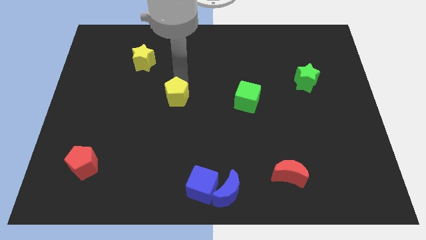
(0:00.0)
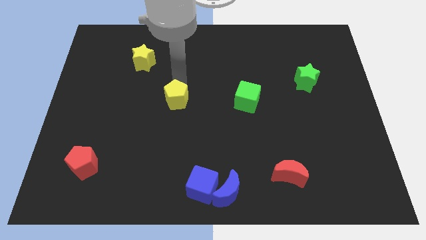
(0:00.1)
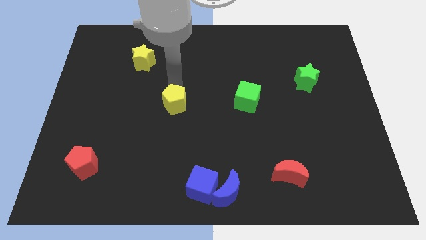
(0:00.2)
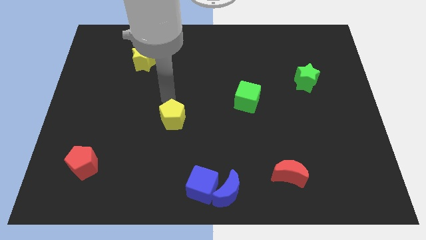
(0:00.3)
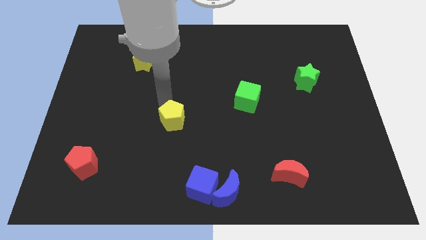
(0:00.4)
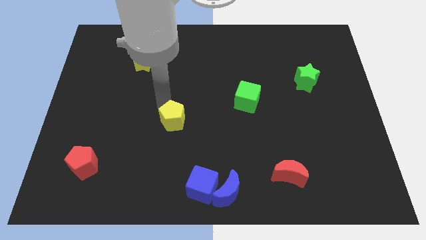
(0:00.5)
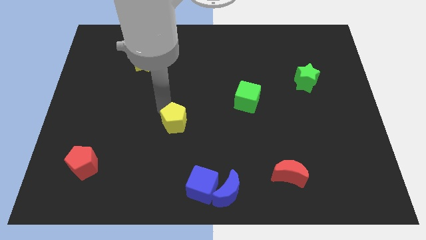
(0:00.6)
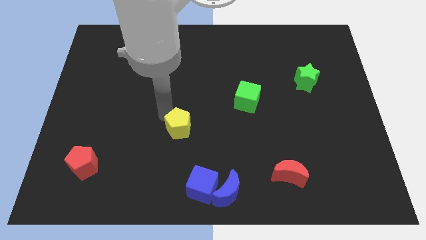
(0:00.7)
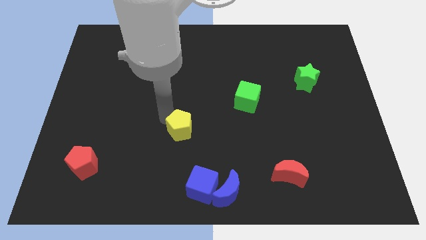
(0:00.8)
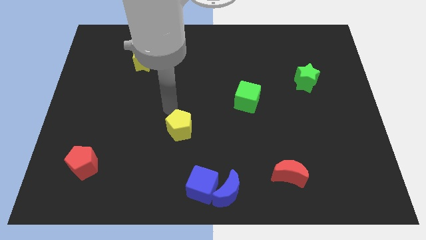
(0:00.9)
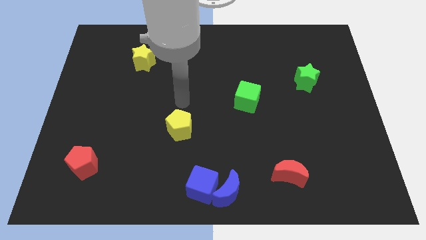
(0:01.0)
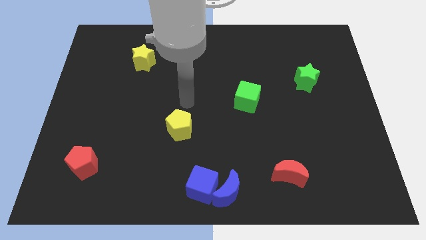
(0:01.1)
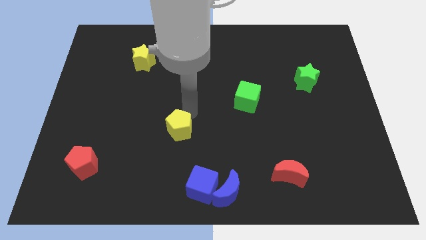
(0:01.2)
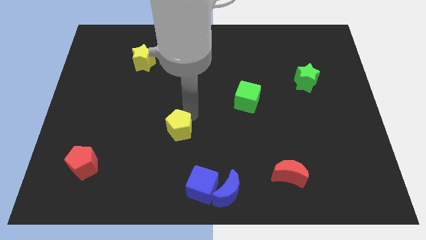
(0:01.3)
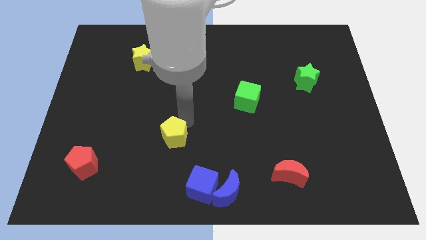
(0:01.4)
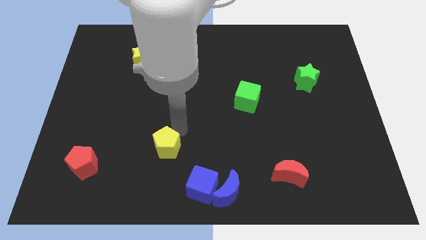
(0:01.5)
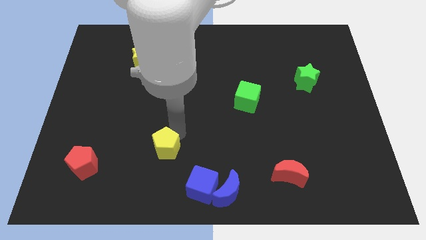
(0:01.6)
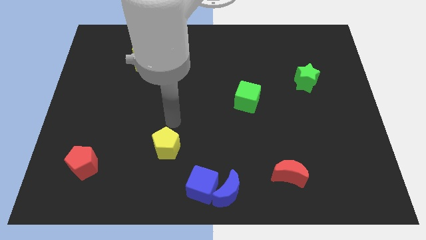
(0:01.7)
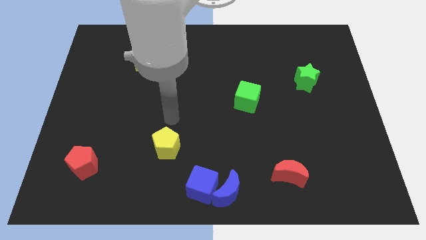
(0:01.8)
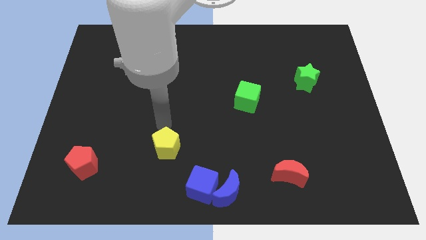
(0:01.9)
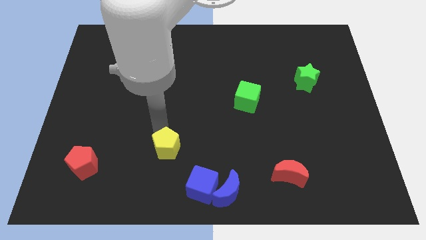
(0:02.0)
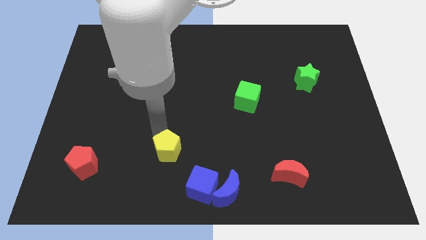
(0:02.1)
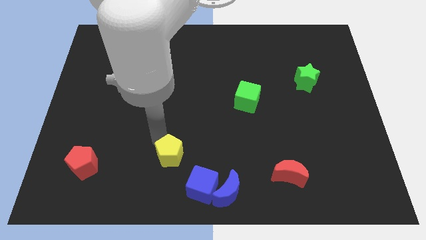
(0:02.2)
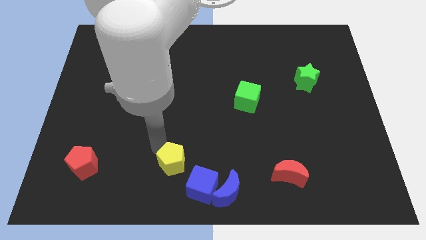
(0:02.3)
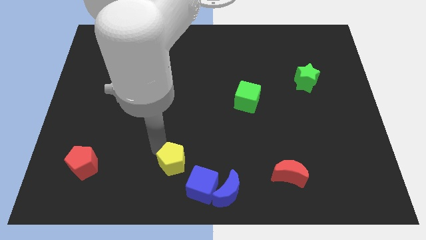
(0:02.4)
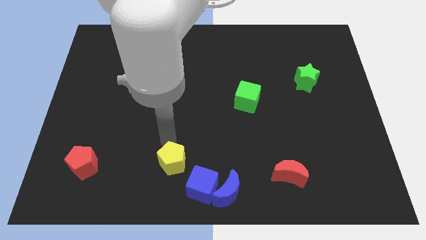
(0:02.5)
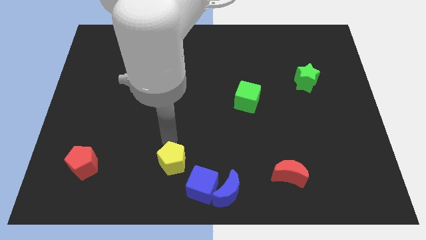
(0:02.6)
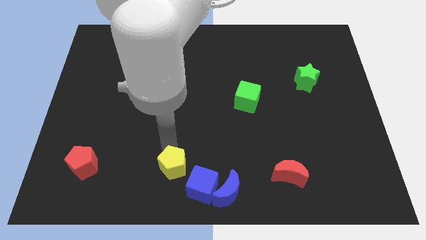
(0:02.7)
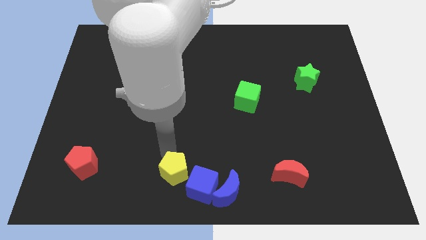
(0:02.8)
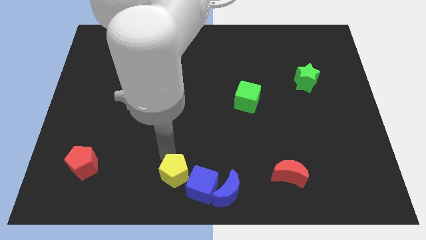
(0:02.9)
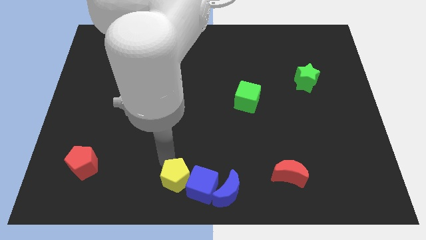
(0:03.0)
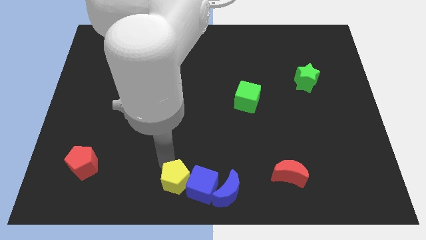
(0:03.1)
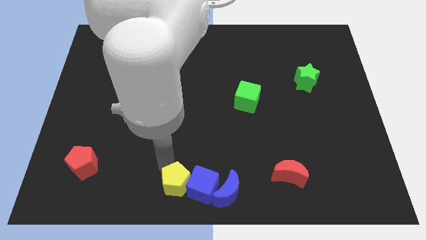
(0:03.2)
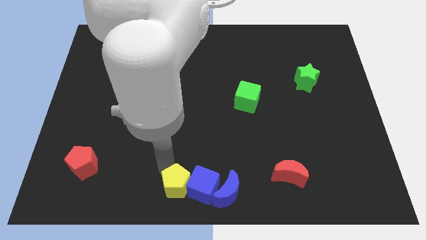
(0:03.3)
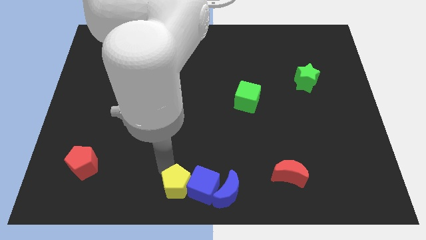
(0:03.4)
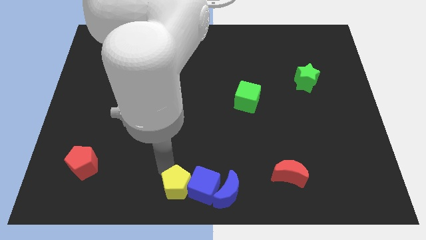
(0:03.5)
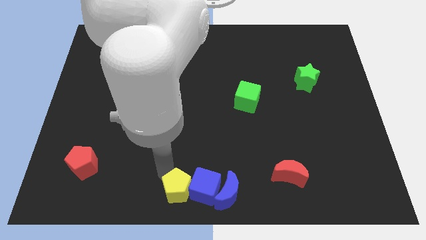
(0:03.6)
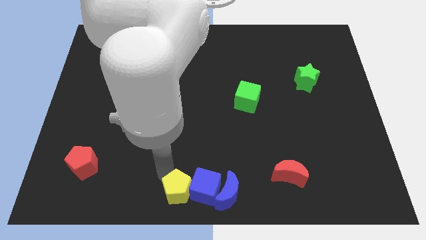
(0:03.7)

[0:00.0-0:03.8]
push the yellow pentagon into the left side of the blue cube

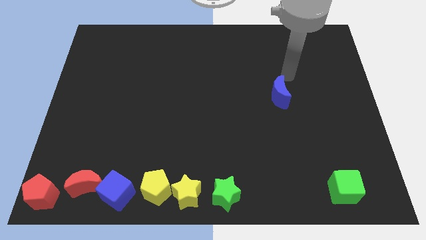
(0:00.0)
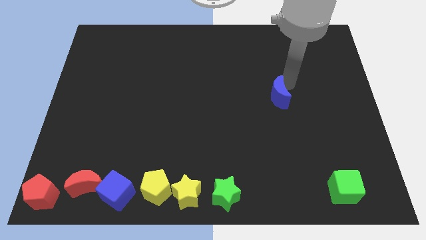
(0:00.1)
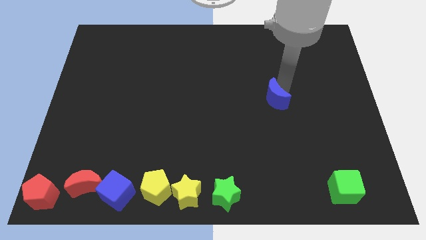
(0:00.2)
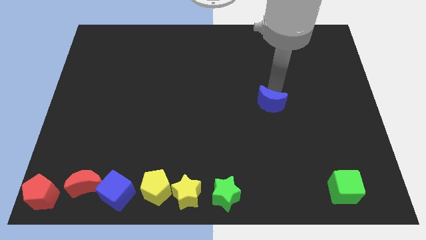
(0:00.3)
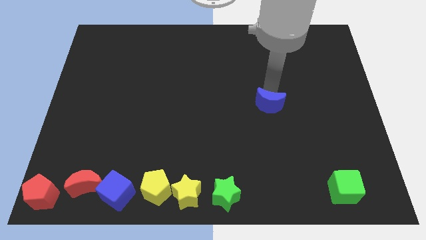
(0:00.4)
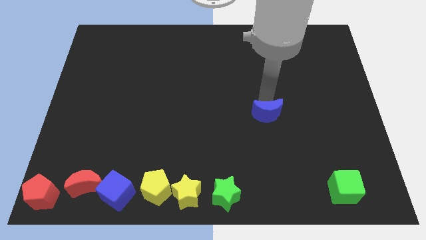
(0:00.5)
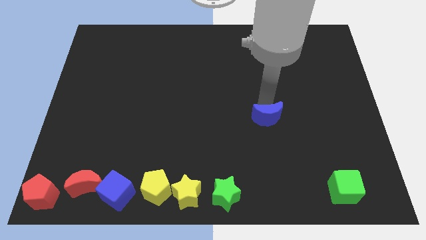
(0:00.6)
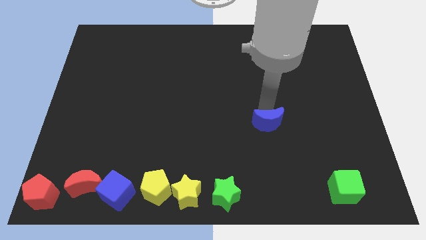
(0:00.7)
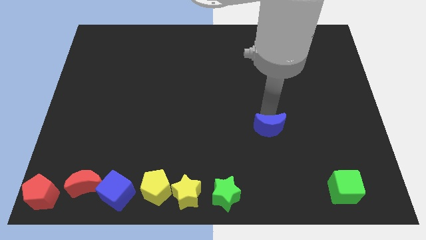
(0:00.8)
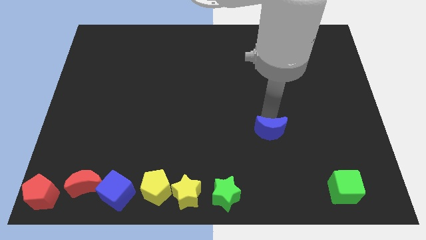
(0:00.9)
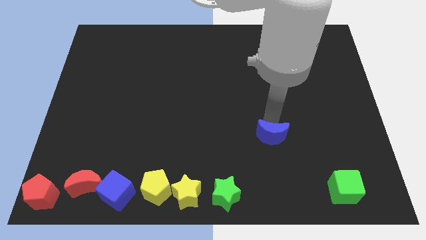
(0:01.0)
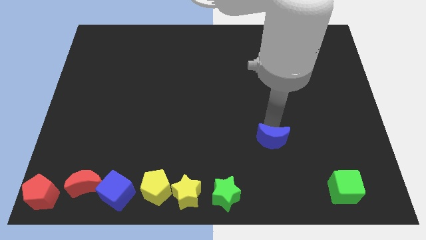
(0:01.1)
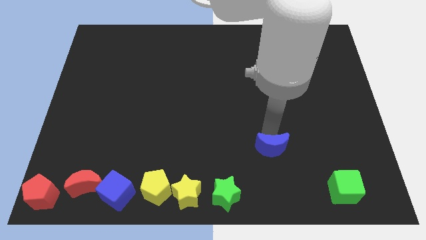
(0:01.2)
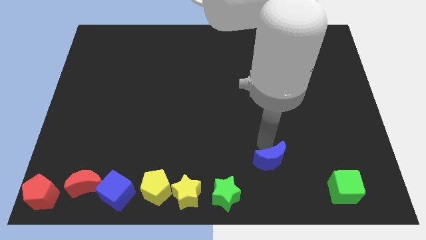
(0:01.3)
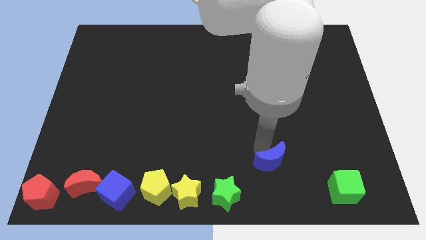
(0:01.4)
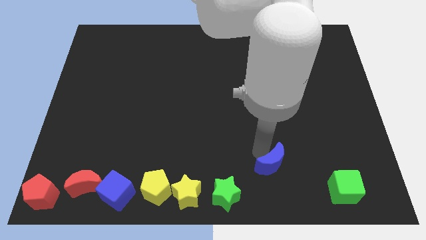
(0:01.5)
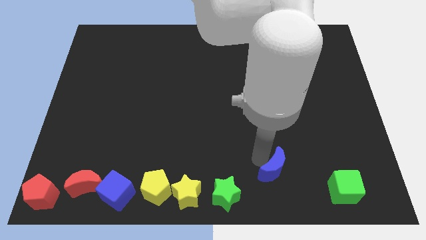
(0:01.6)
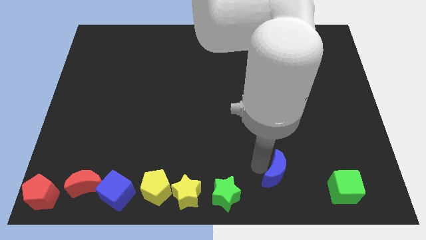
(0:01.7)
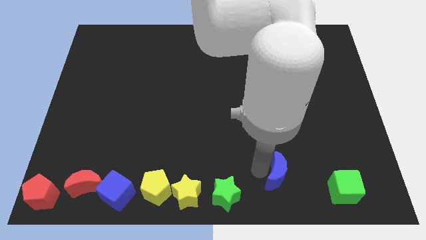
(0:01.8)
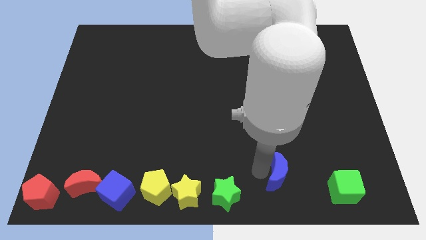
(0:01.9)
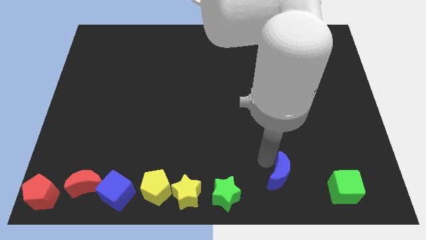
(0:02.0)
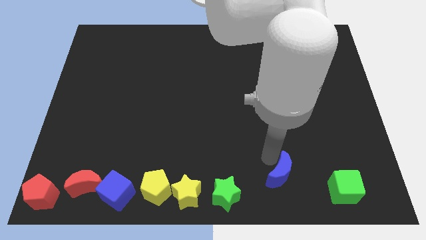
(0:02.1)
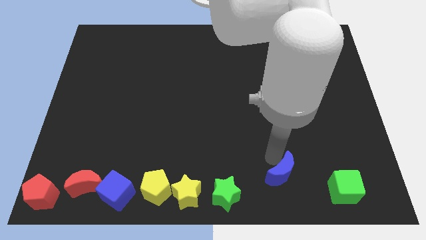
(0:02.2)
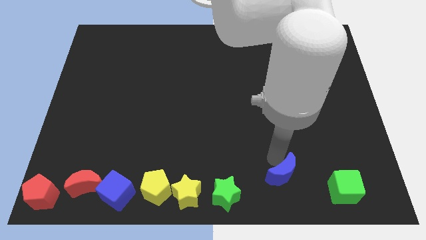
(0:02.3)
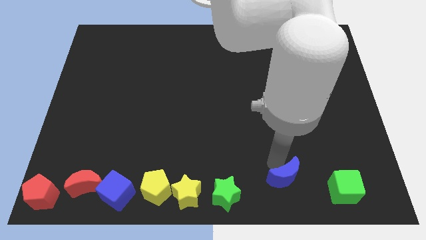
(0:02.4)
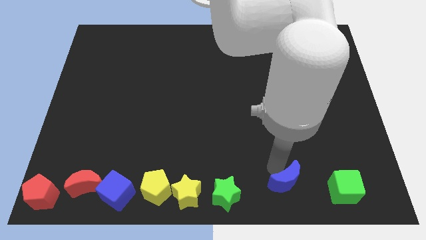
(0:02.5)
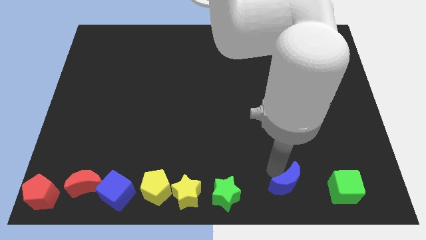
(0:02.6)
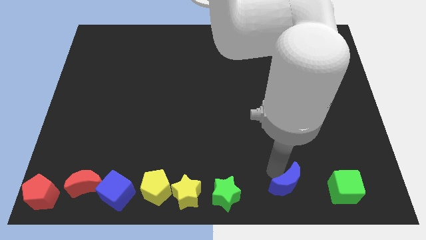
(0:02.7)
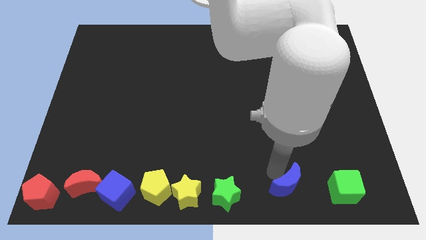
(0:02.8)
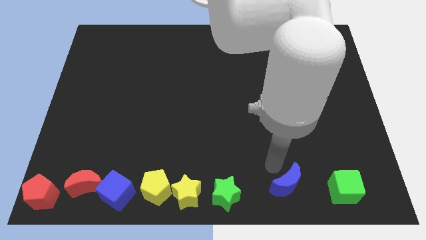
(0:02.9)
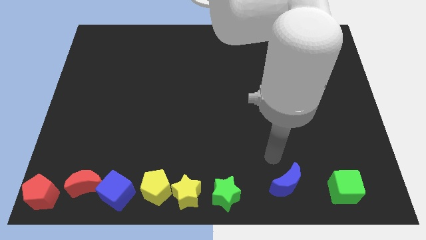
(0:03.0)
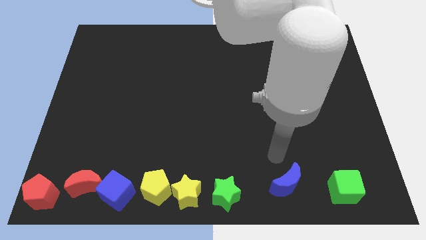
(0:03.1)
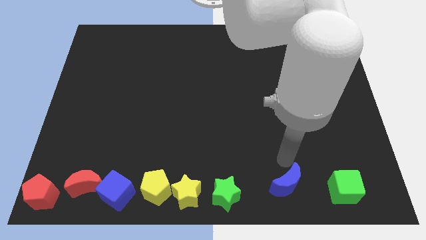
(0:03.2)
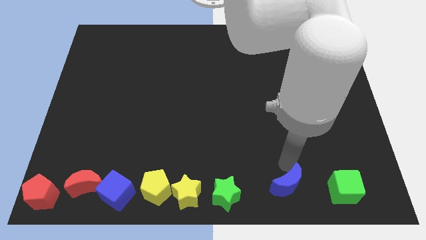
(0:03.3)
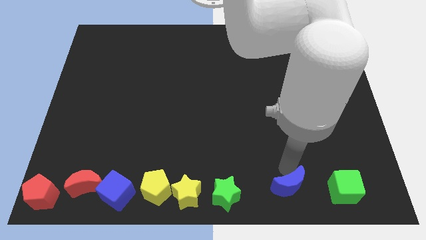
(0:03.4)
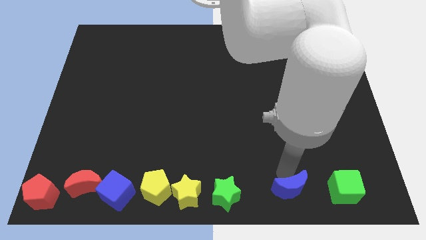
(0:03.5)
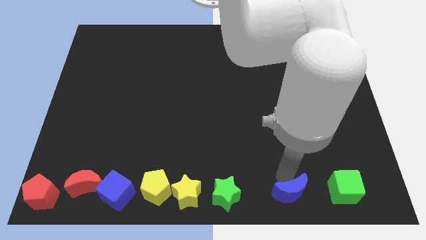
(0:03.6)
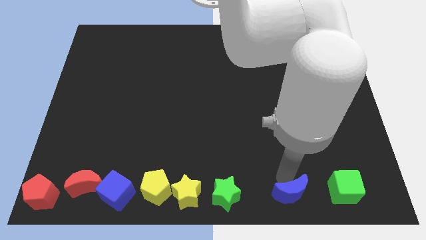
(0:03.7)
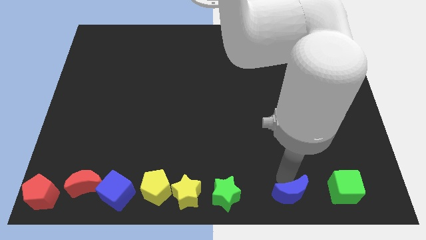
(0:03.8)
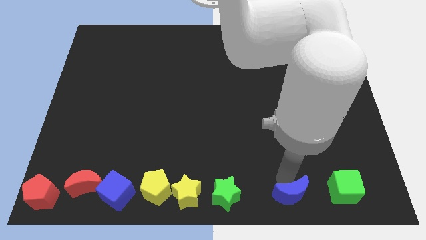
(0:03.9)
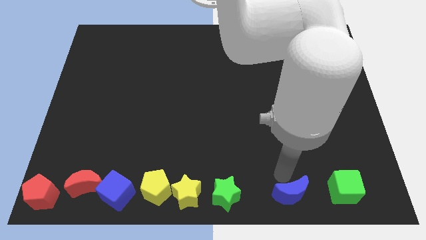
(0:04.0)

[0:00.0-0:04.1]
place the blue moon to the left of the green cube

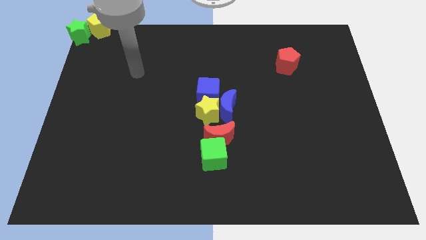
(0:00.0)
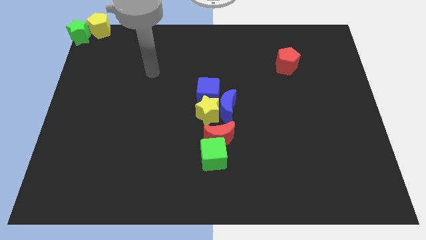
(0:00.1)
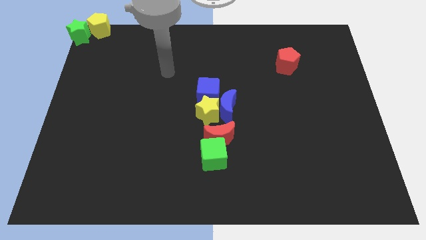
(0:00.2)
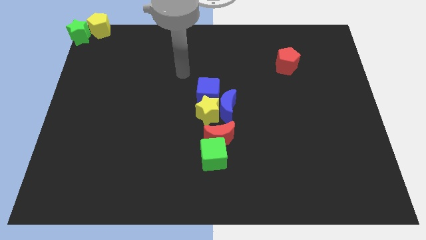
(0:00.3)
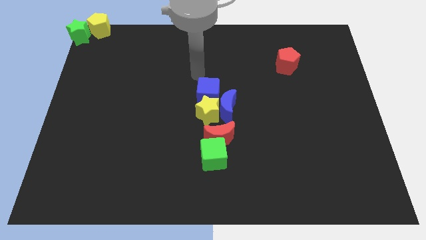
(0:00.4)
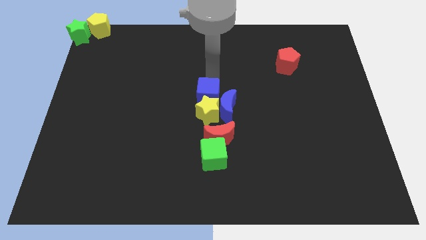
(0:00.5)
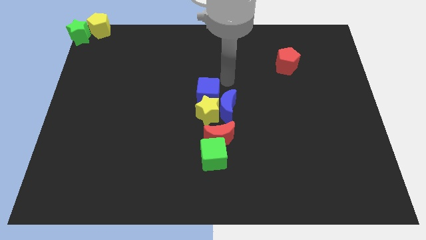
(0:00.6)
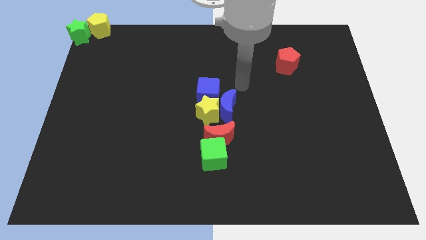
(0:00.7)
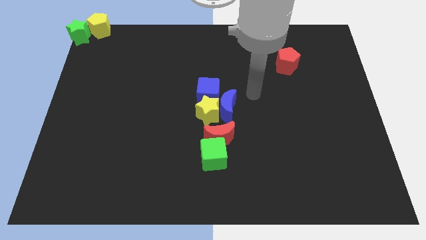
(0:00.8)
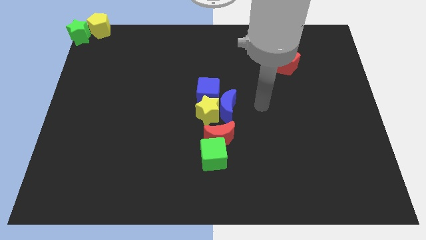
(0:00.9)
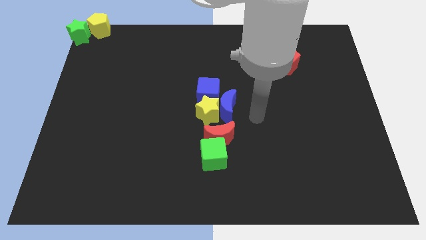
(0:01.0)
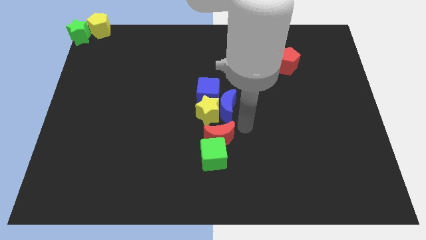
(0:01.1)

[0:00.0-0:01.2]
place your arm at the right of the red crescent
